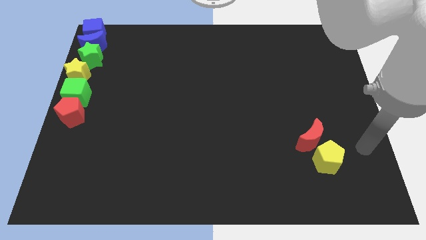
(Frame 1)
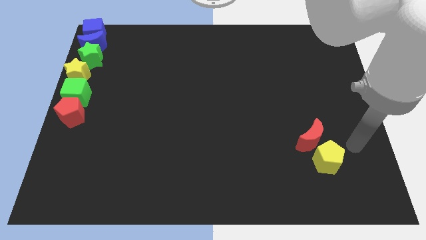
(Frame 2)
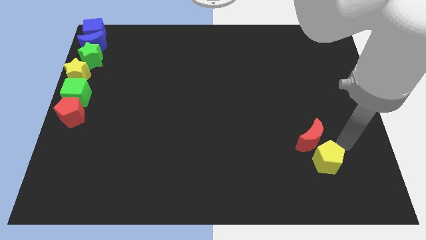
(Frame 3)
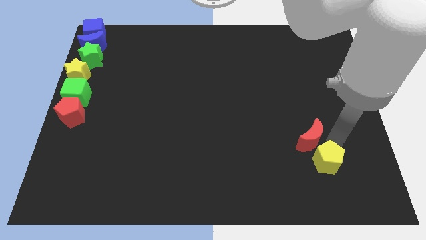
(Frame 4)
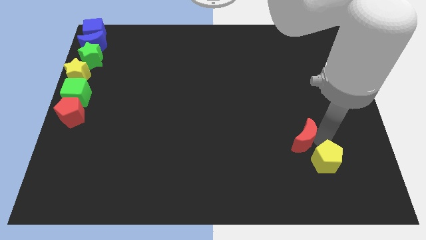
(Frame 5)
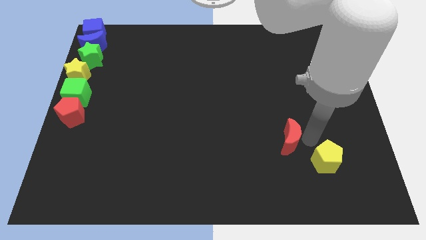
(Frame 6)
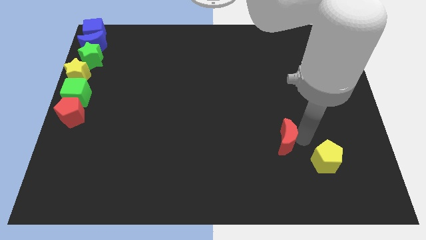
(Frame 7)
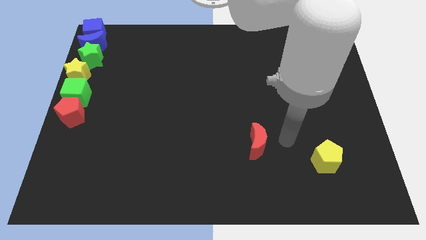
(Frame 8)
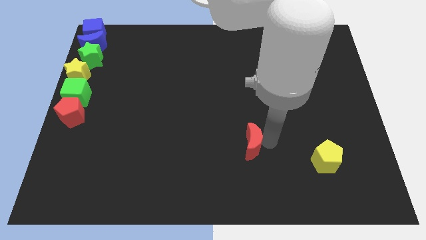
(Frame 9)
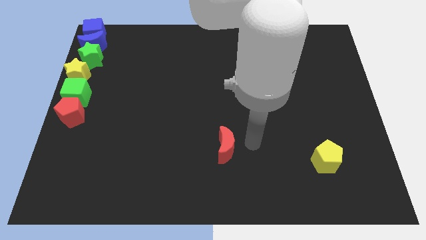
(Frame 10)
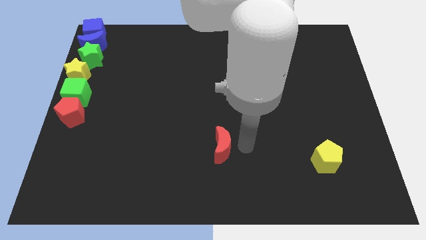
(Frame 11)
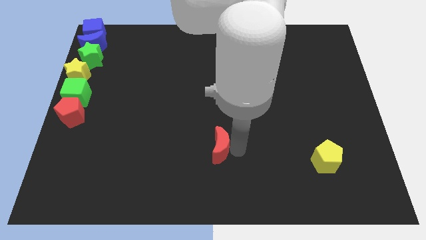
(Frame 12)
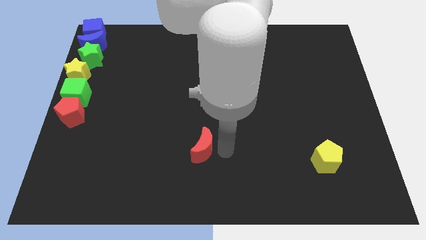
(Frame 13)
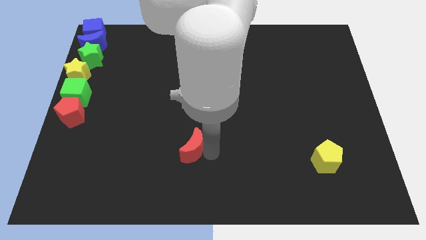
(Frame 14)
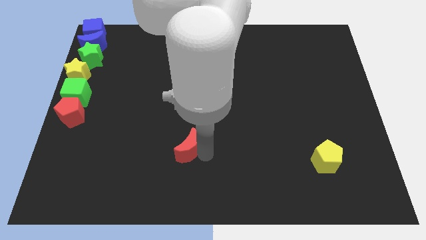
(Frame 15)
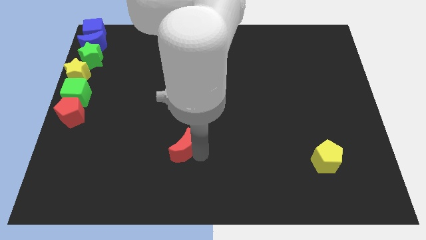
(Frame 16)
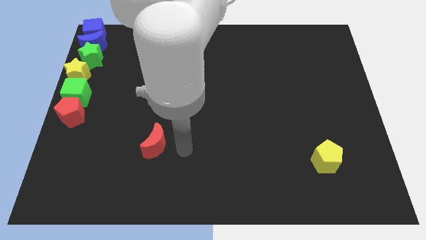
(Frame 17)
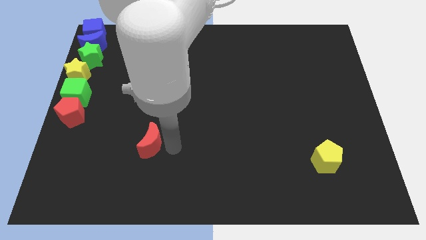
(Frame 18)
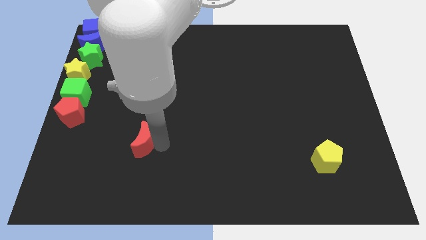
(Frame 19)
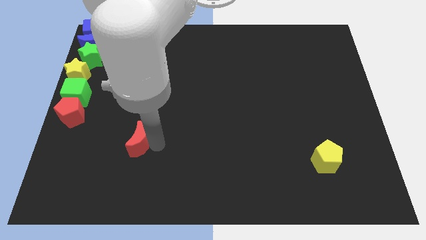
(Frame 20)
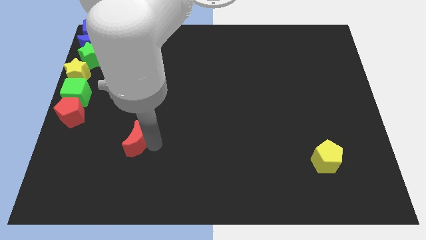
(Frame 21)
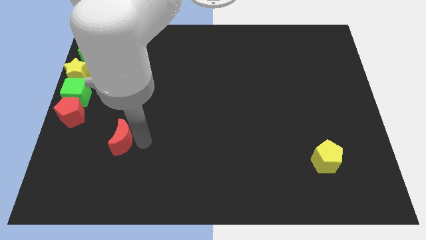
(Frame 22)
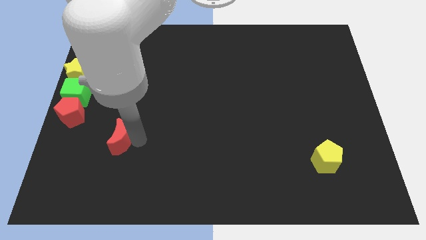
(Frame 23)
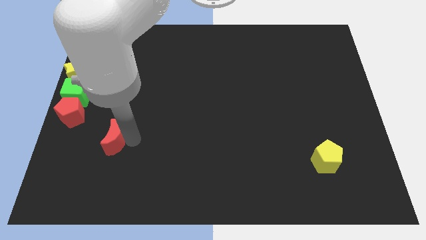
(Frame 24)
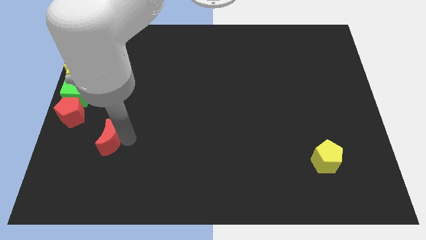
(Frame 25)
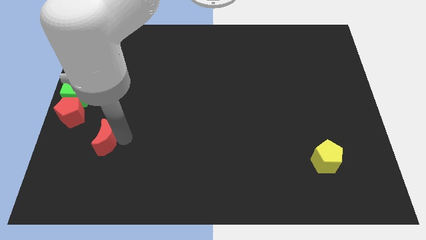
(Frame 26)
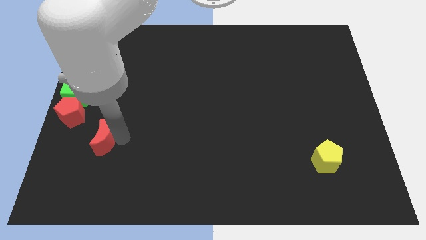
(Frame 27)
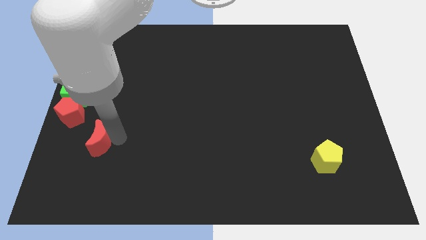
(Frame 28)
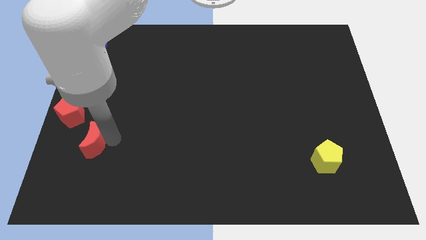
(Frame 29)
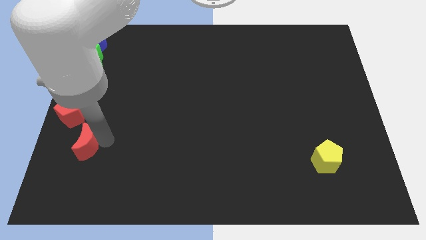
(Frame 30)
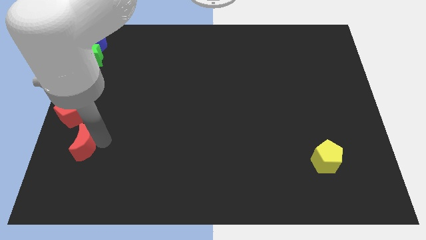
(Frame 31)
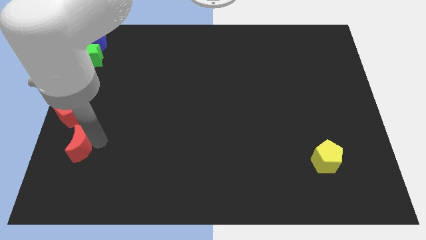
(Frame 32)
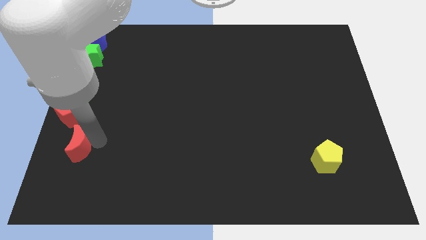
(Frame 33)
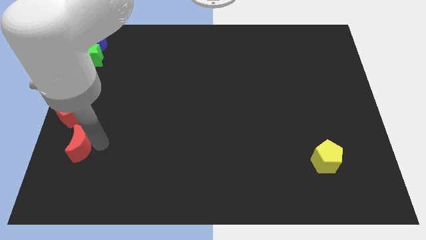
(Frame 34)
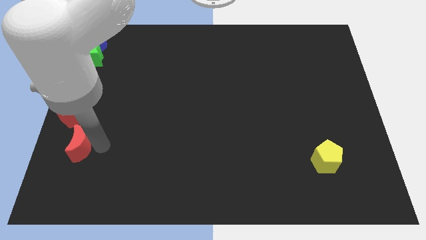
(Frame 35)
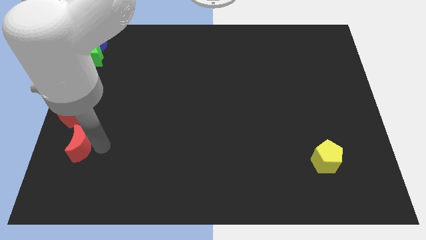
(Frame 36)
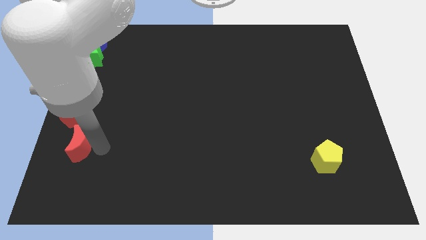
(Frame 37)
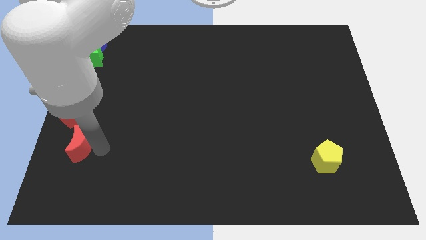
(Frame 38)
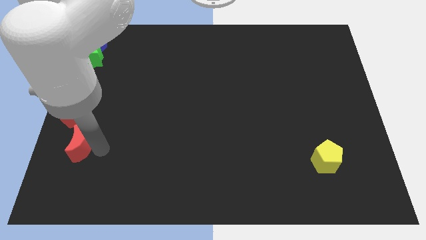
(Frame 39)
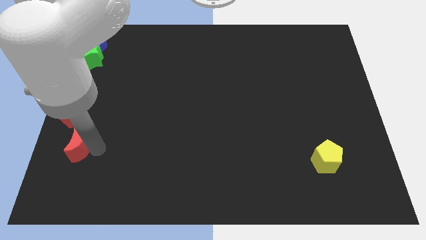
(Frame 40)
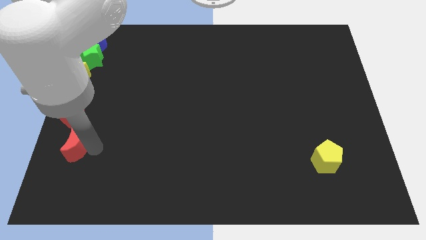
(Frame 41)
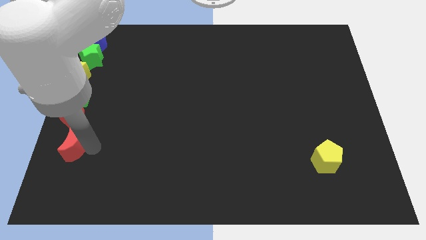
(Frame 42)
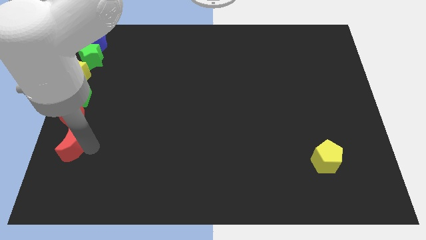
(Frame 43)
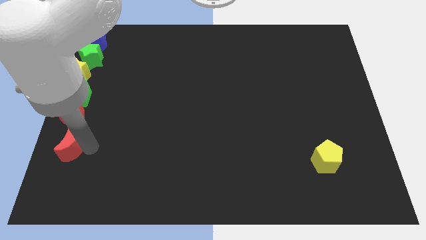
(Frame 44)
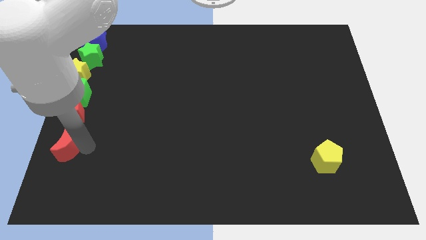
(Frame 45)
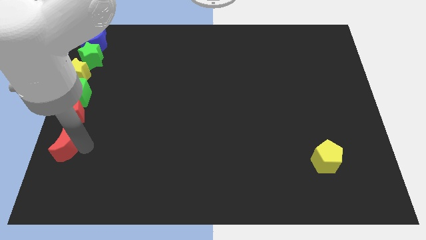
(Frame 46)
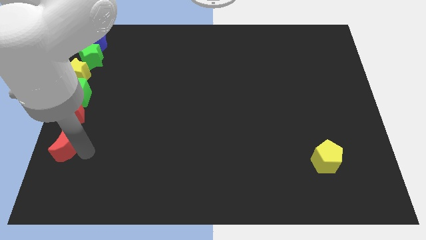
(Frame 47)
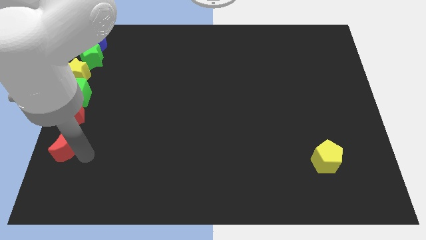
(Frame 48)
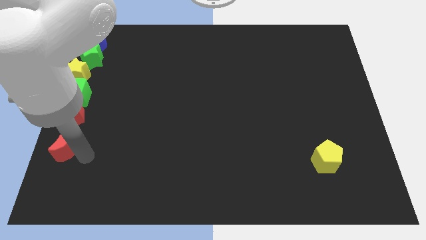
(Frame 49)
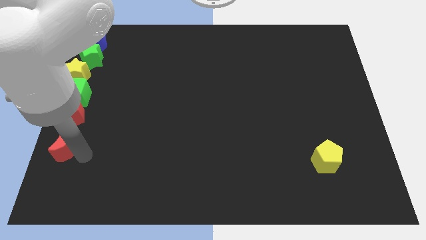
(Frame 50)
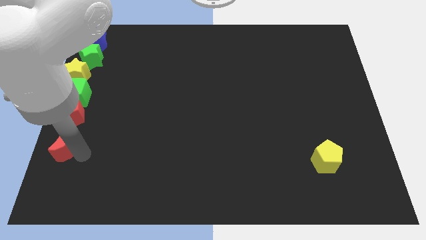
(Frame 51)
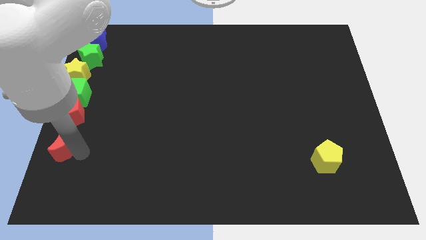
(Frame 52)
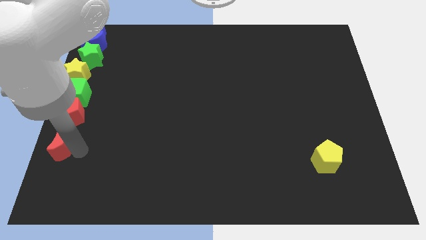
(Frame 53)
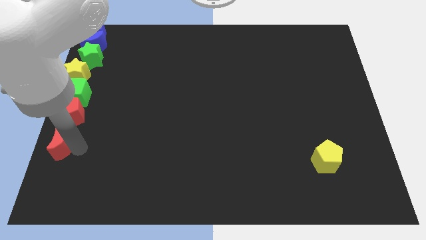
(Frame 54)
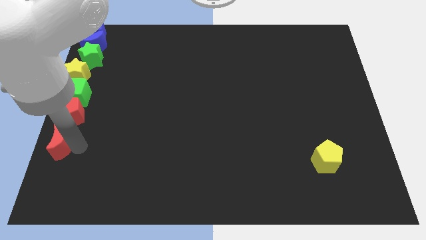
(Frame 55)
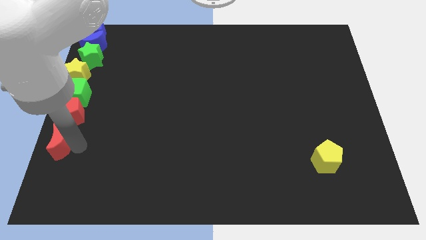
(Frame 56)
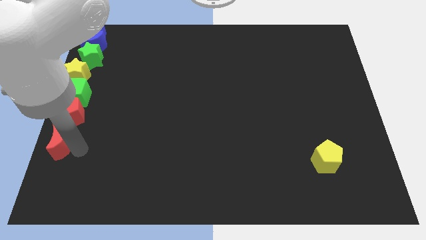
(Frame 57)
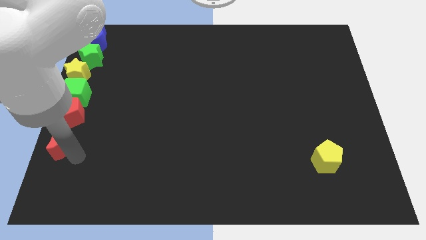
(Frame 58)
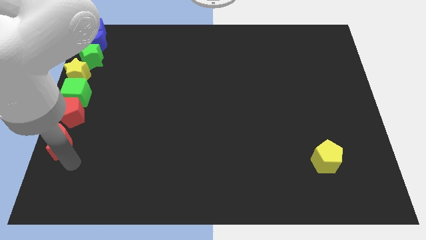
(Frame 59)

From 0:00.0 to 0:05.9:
push the red crescent to the bottom side of the red pentagon

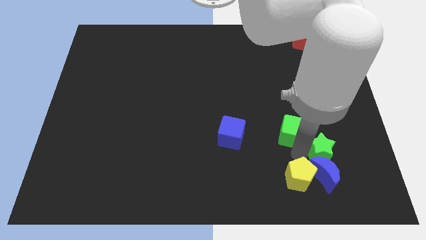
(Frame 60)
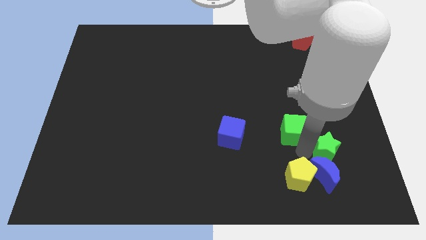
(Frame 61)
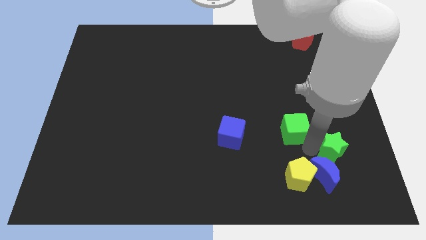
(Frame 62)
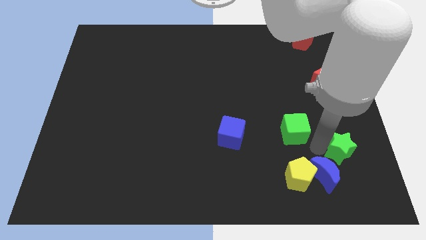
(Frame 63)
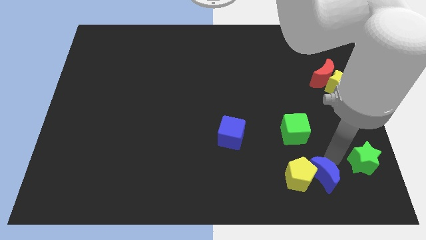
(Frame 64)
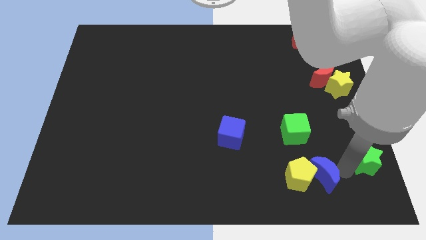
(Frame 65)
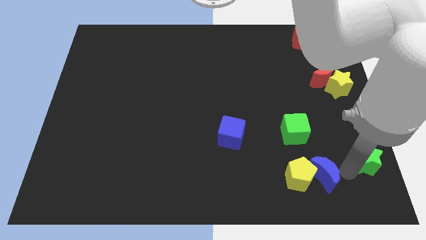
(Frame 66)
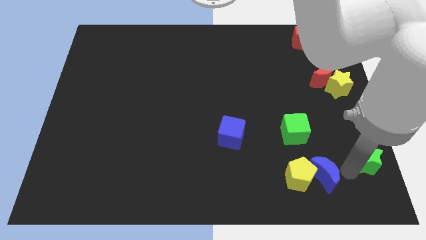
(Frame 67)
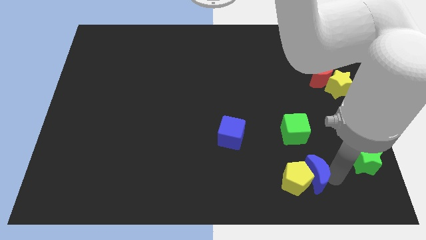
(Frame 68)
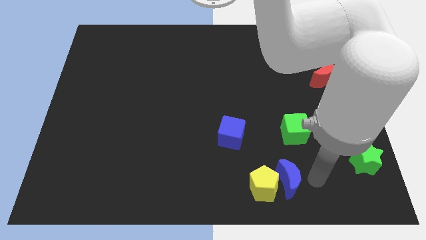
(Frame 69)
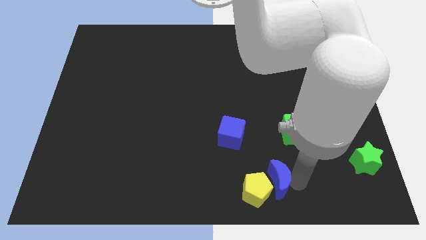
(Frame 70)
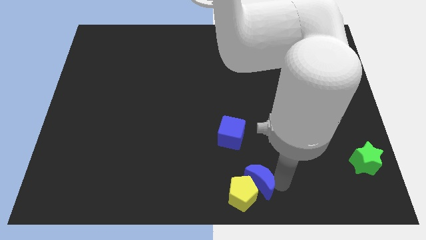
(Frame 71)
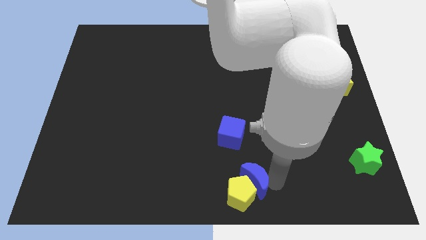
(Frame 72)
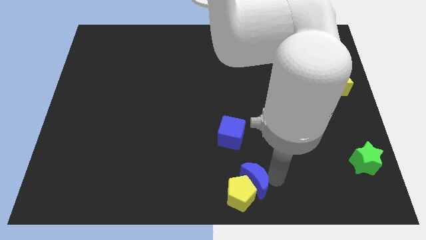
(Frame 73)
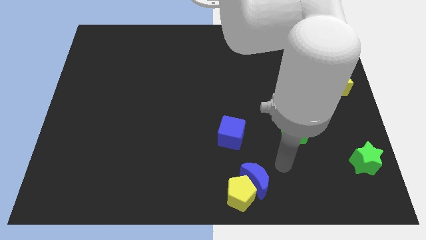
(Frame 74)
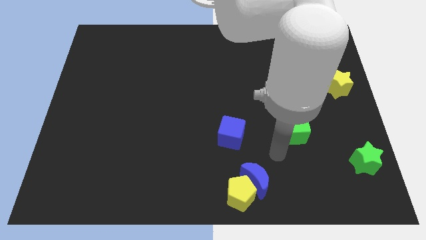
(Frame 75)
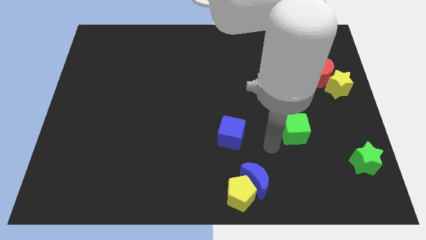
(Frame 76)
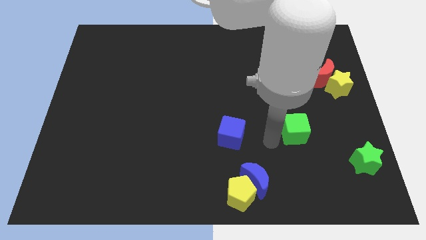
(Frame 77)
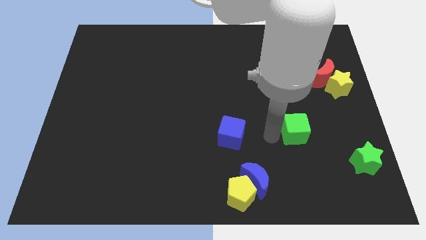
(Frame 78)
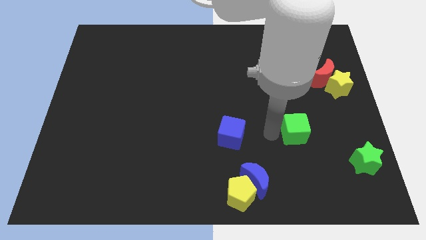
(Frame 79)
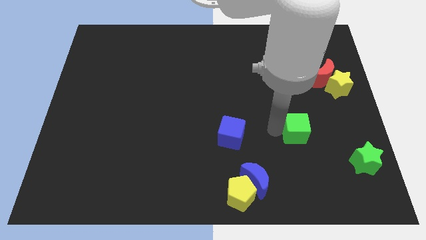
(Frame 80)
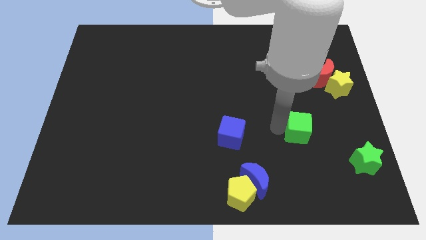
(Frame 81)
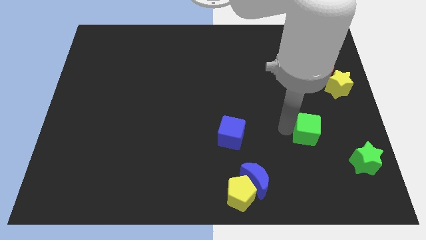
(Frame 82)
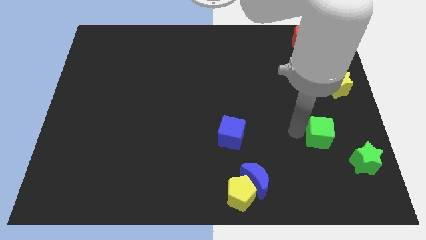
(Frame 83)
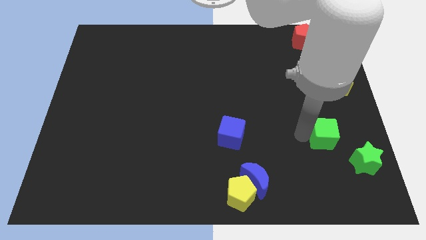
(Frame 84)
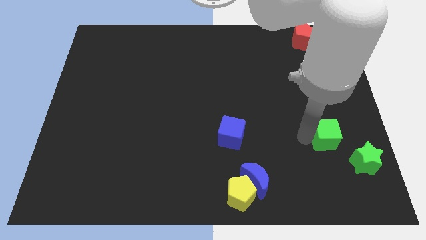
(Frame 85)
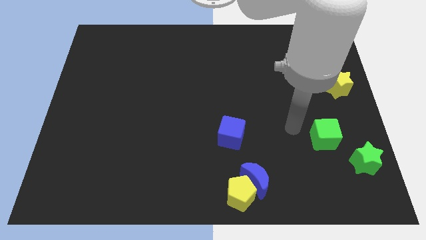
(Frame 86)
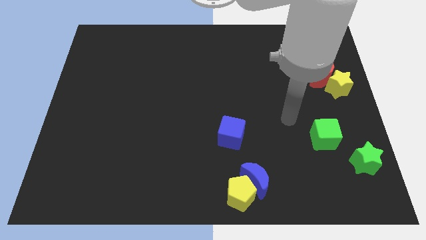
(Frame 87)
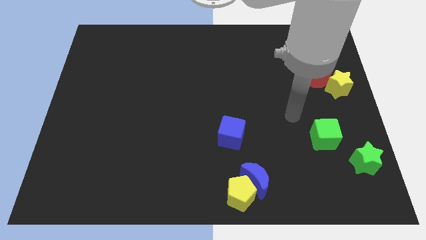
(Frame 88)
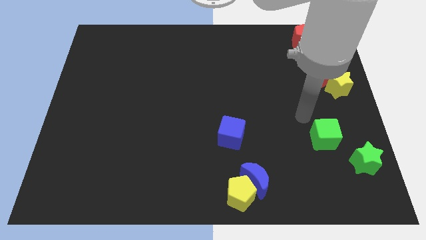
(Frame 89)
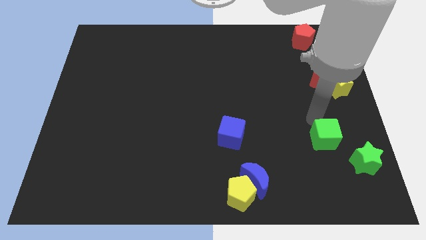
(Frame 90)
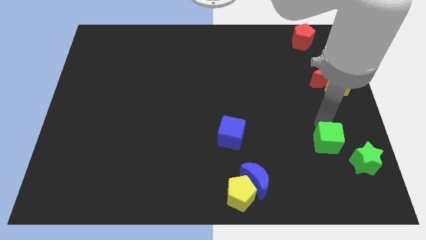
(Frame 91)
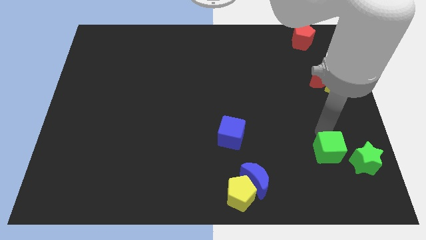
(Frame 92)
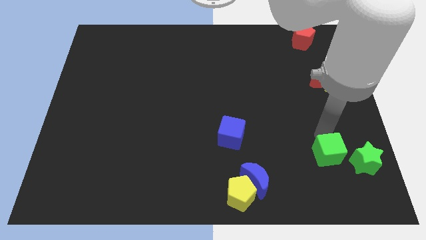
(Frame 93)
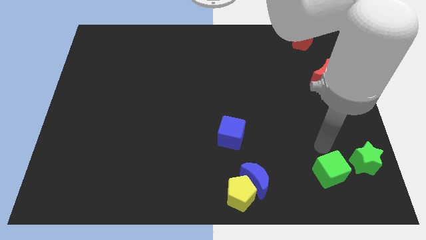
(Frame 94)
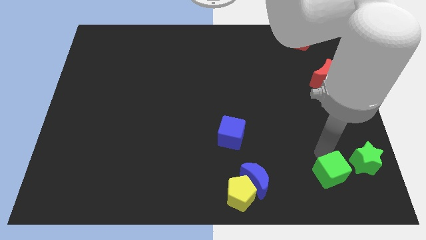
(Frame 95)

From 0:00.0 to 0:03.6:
separate green blocks
